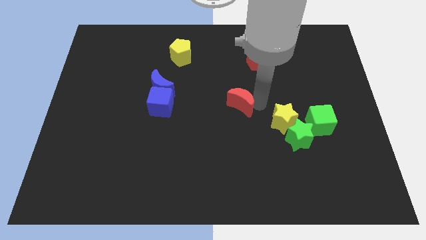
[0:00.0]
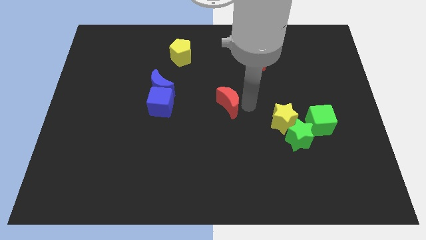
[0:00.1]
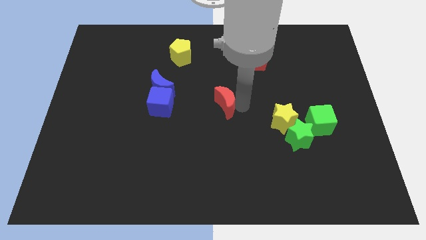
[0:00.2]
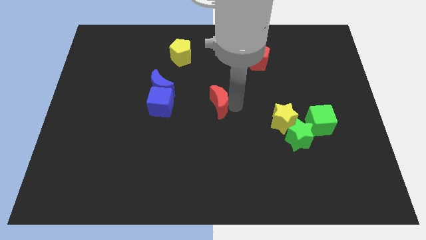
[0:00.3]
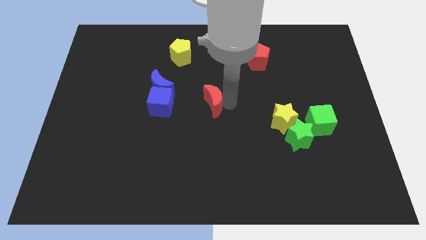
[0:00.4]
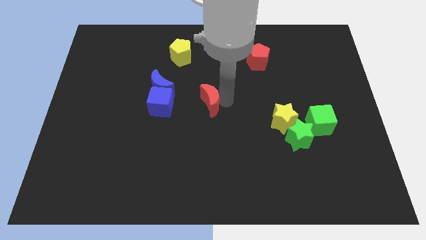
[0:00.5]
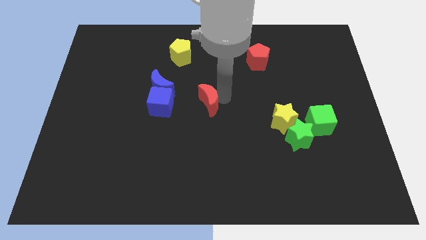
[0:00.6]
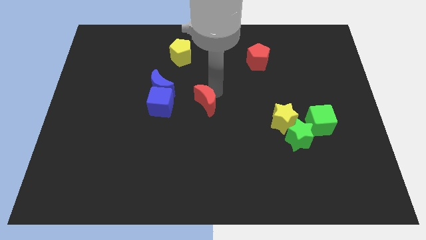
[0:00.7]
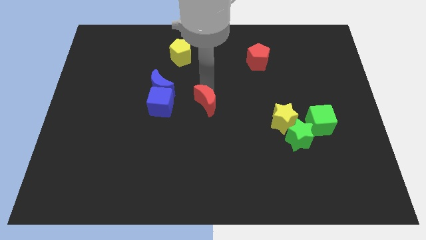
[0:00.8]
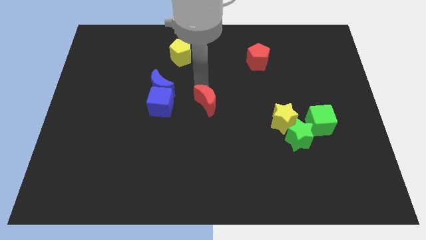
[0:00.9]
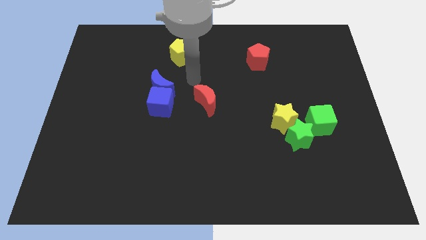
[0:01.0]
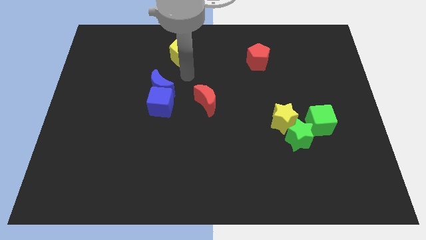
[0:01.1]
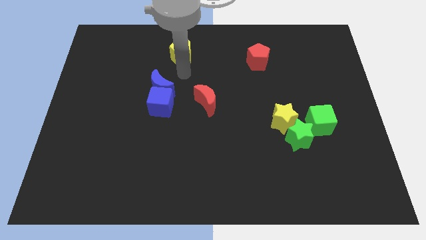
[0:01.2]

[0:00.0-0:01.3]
push the red crescent towards the blue cube

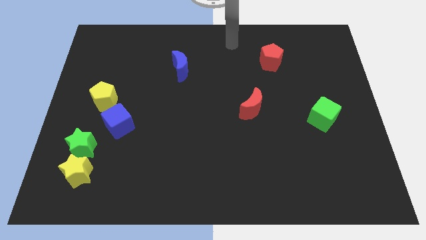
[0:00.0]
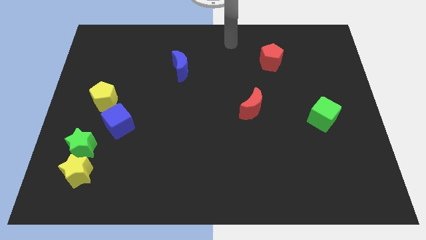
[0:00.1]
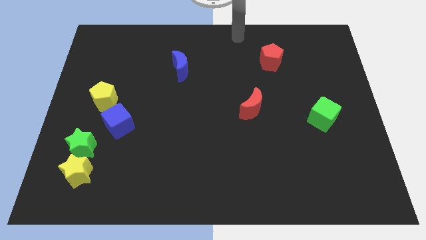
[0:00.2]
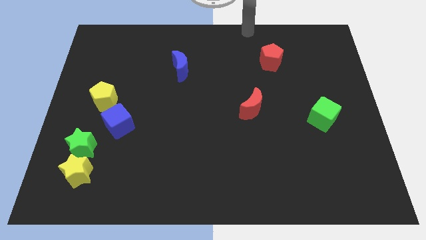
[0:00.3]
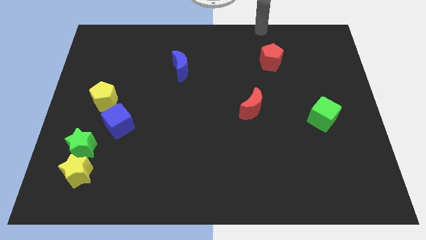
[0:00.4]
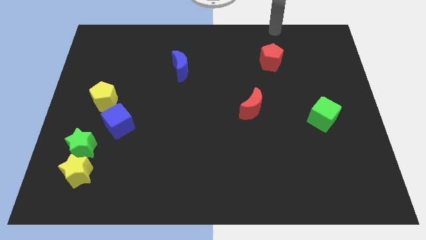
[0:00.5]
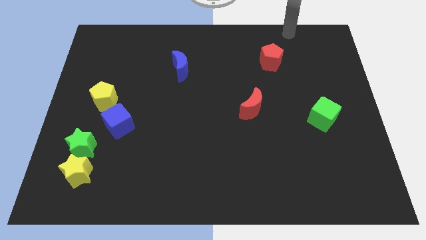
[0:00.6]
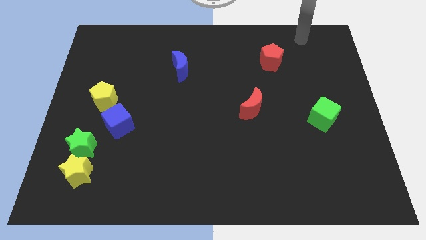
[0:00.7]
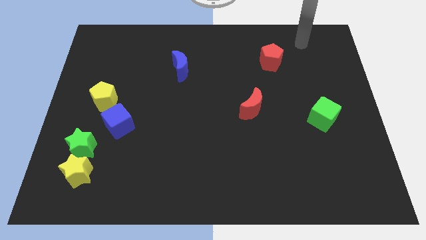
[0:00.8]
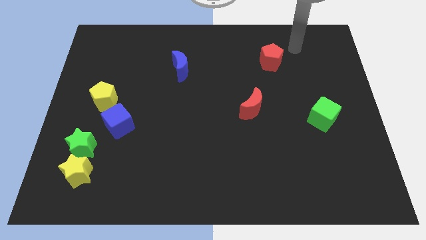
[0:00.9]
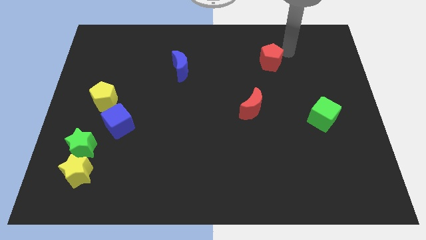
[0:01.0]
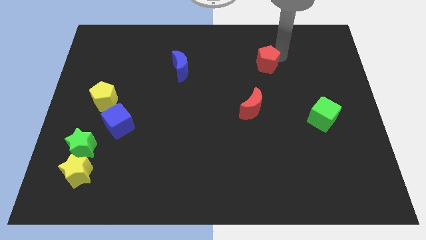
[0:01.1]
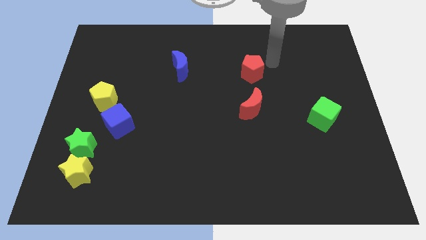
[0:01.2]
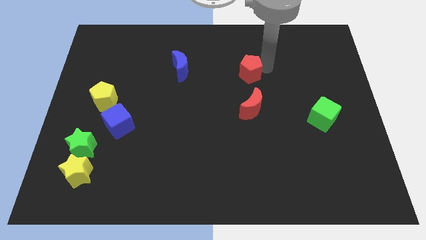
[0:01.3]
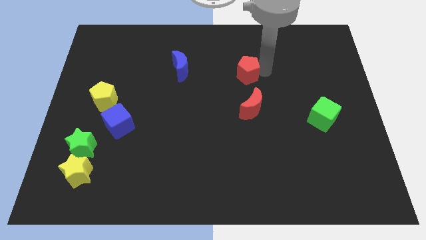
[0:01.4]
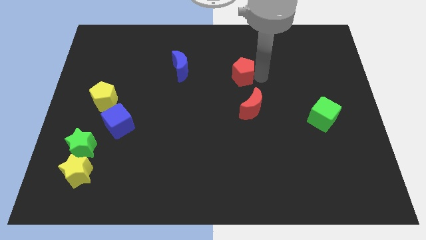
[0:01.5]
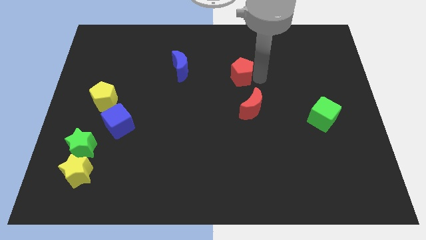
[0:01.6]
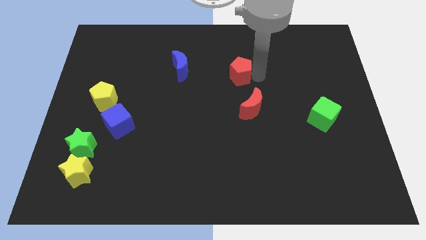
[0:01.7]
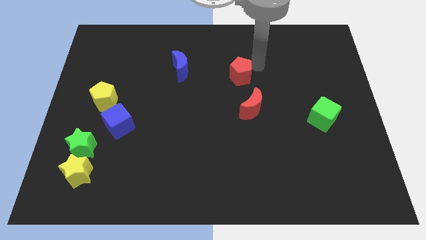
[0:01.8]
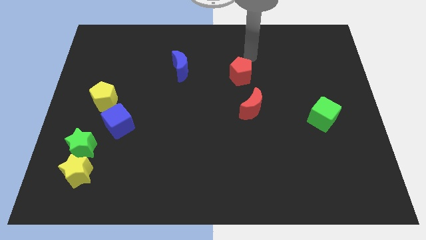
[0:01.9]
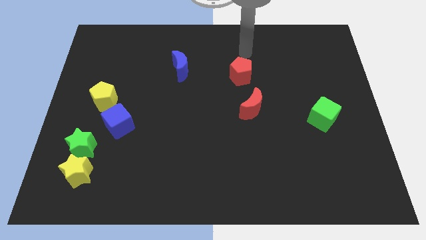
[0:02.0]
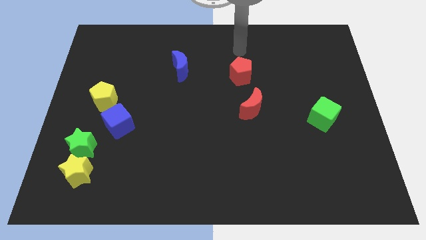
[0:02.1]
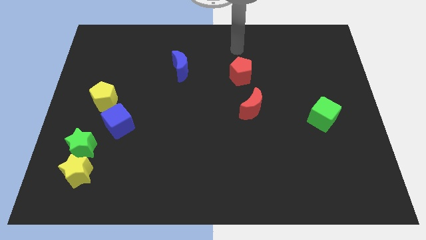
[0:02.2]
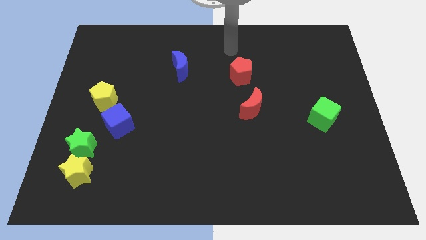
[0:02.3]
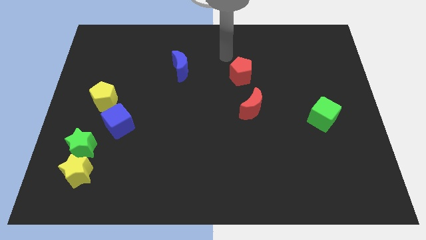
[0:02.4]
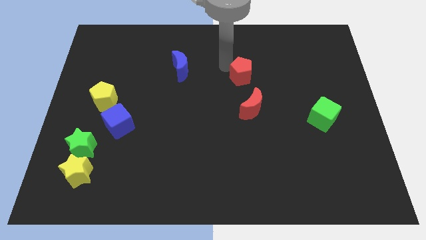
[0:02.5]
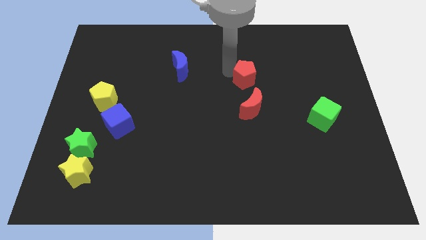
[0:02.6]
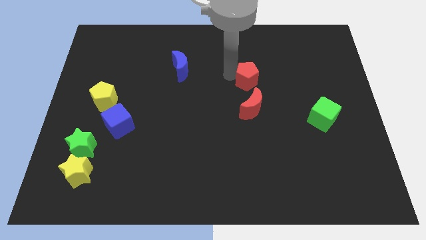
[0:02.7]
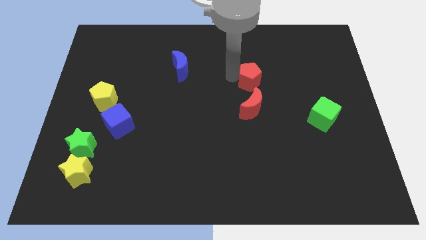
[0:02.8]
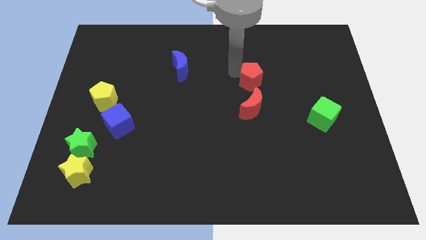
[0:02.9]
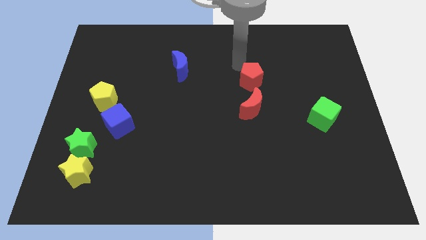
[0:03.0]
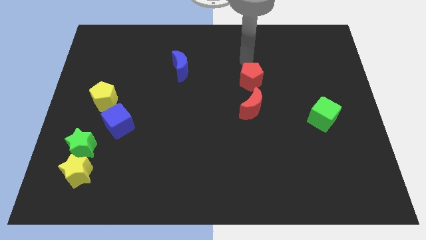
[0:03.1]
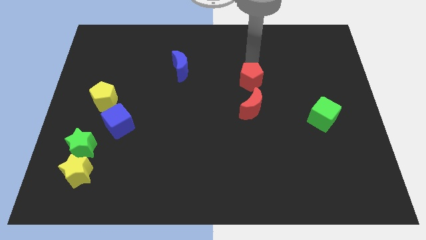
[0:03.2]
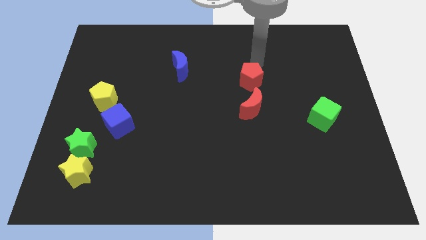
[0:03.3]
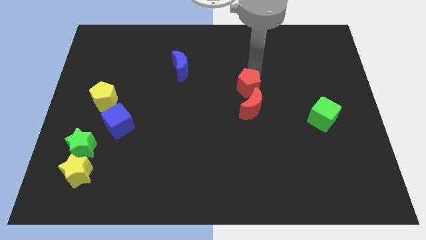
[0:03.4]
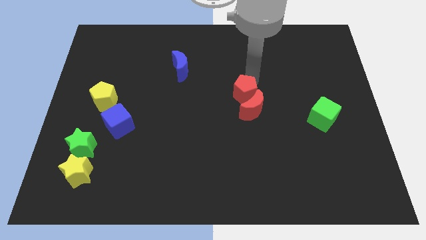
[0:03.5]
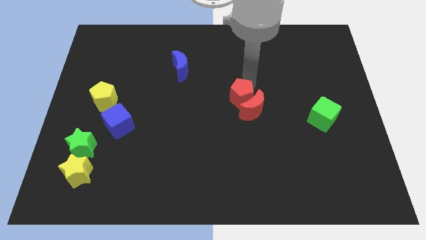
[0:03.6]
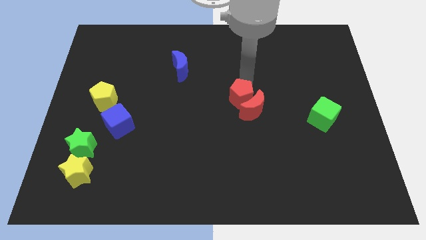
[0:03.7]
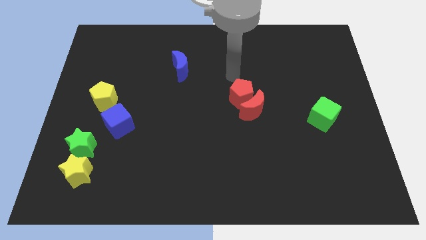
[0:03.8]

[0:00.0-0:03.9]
place the red pentagon into the red crescent

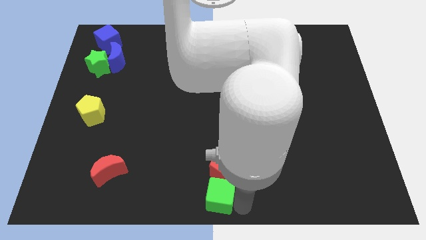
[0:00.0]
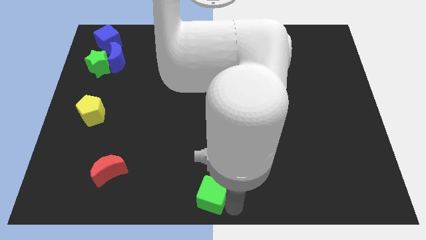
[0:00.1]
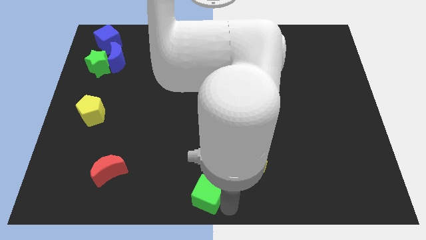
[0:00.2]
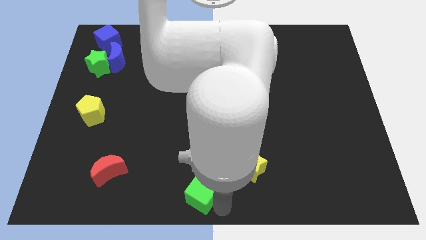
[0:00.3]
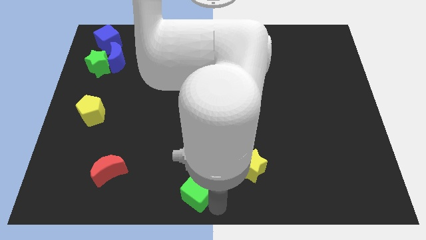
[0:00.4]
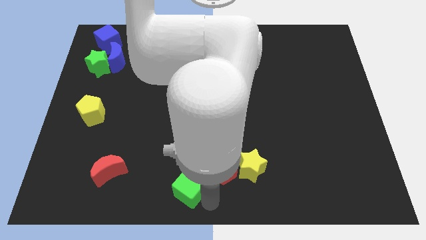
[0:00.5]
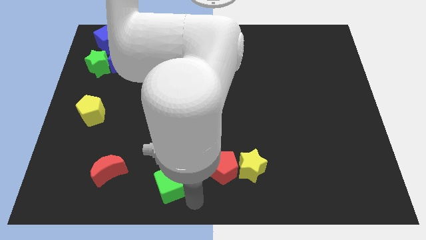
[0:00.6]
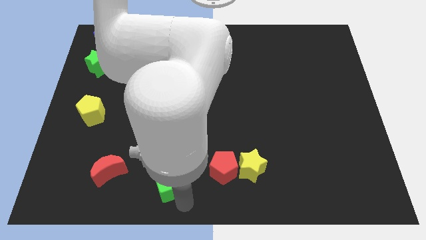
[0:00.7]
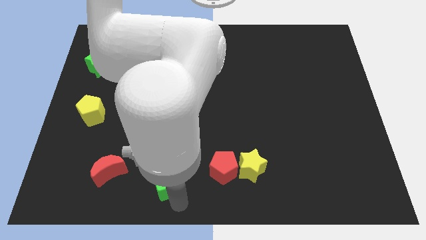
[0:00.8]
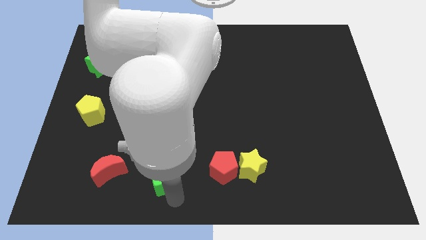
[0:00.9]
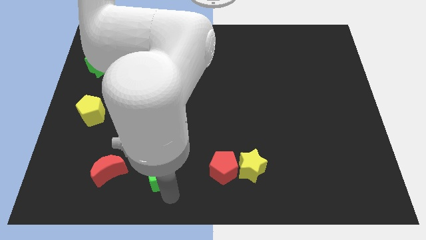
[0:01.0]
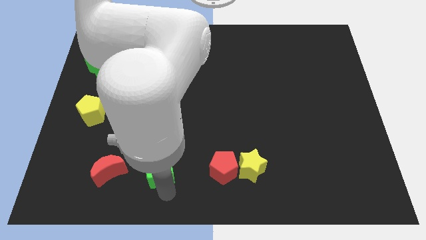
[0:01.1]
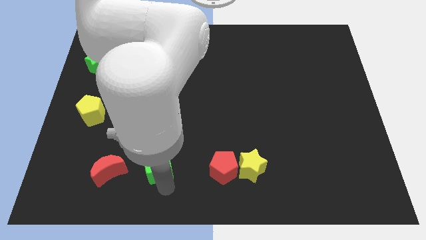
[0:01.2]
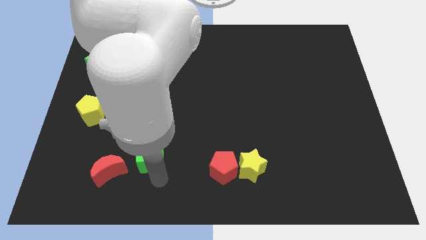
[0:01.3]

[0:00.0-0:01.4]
place the green cube to the right side of the red moon

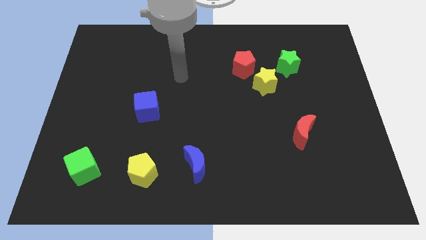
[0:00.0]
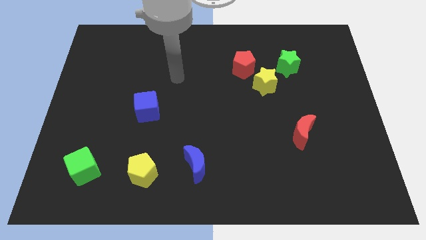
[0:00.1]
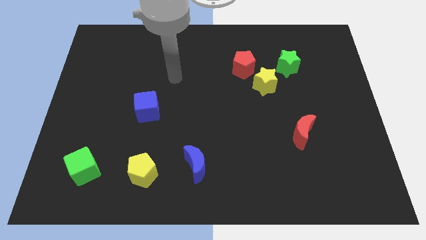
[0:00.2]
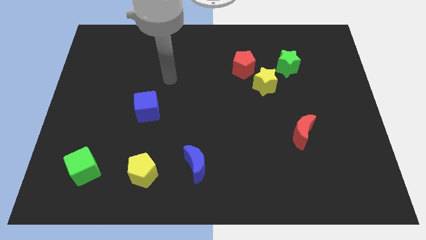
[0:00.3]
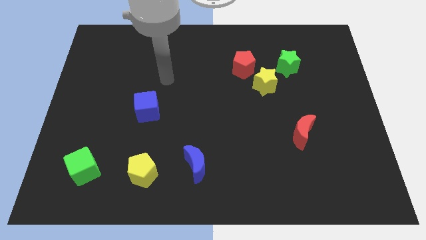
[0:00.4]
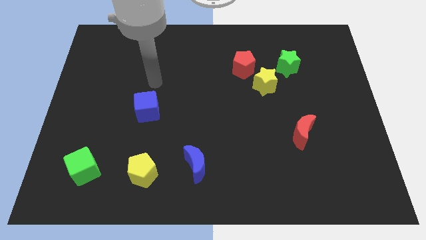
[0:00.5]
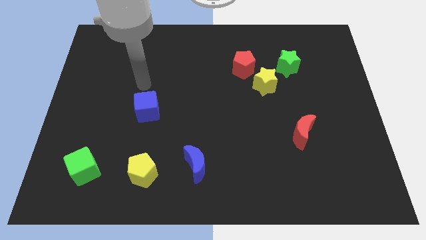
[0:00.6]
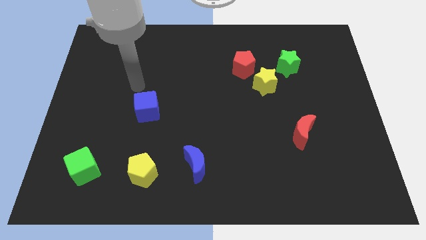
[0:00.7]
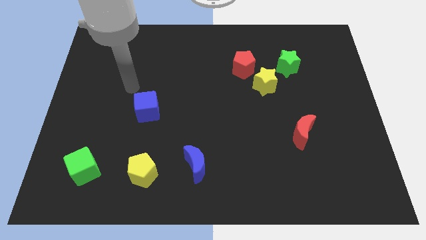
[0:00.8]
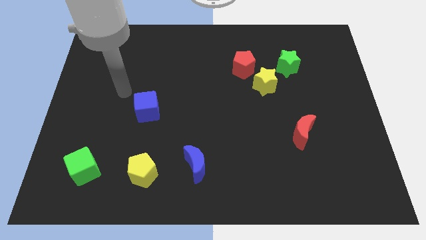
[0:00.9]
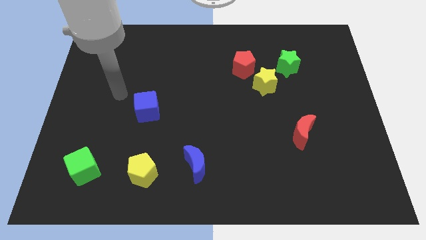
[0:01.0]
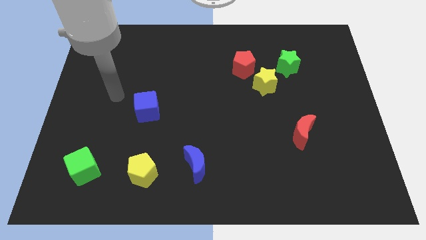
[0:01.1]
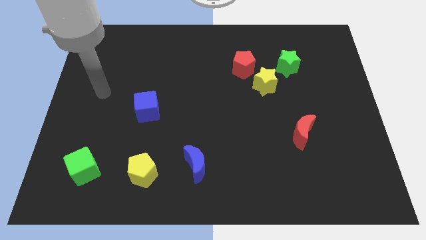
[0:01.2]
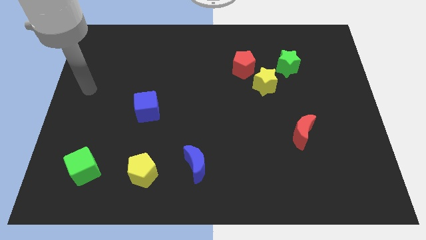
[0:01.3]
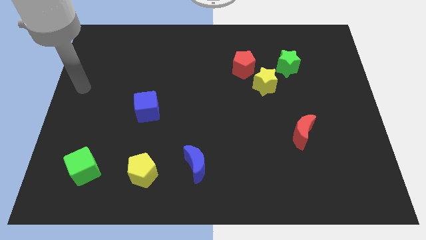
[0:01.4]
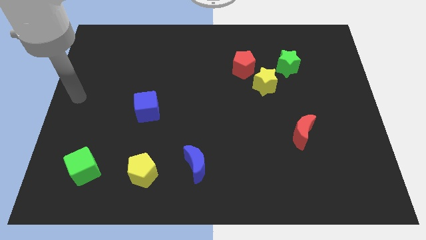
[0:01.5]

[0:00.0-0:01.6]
move your hand to the center left

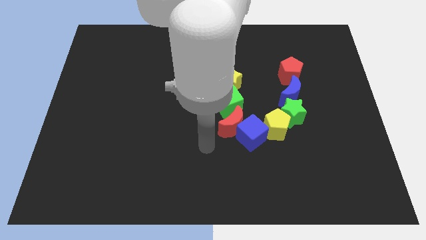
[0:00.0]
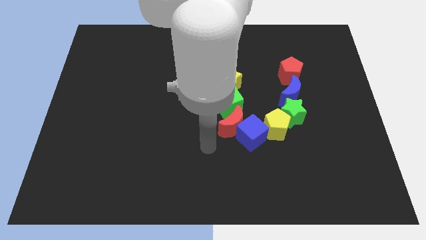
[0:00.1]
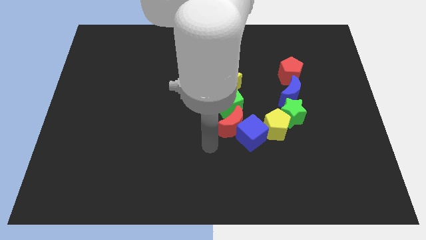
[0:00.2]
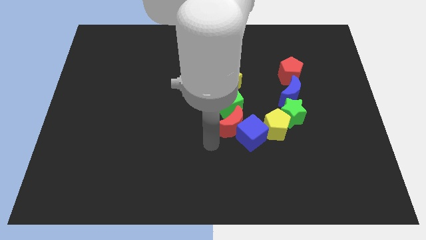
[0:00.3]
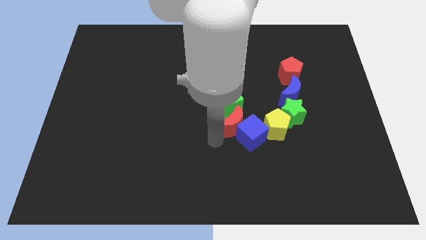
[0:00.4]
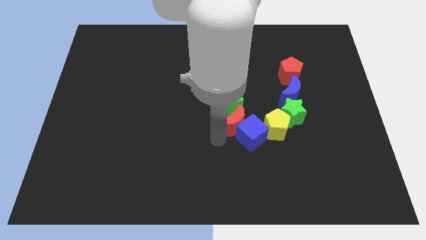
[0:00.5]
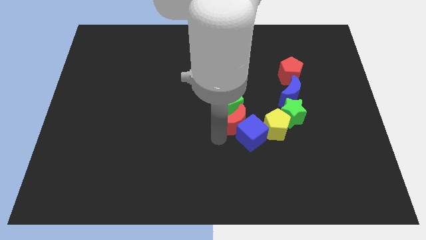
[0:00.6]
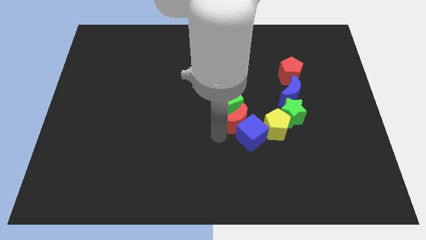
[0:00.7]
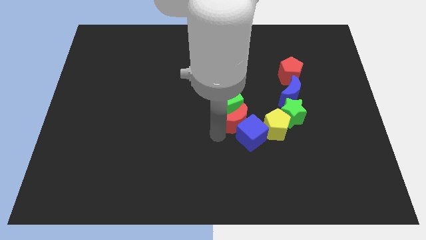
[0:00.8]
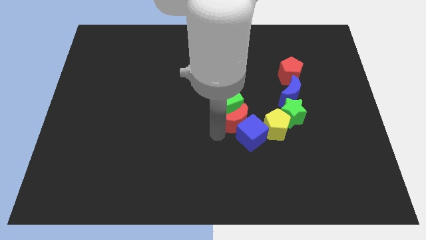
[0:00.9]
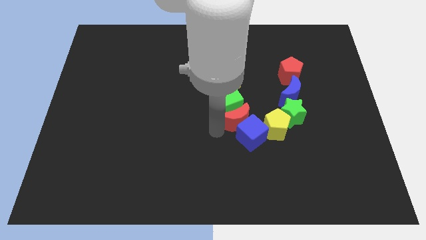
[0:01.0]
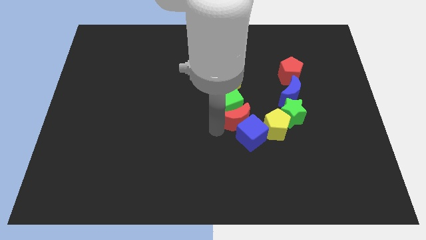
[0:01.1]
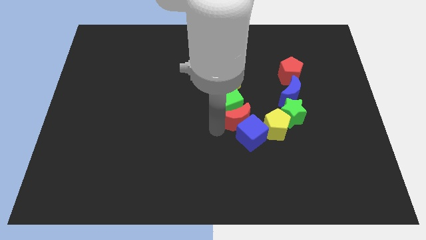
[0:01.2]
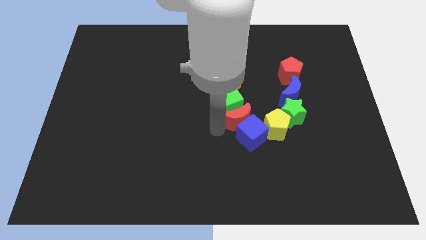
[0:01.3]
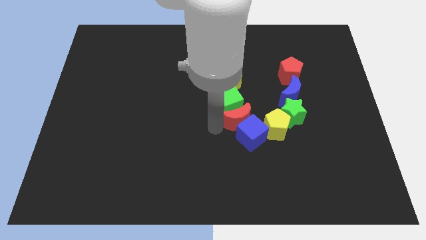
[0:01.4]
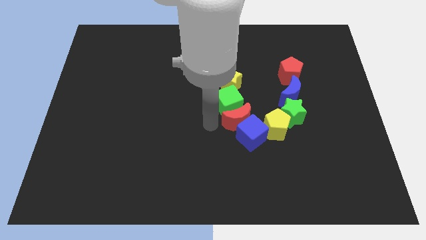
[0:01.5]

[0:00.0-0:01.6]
slightly move the red moon
